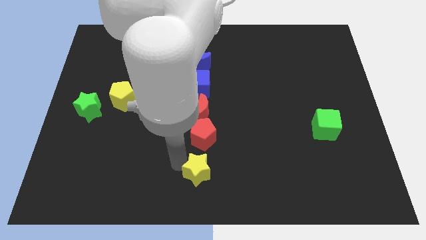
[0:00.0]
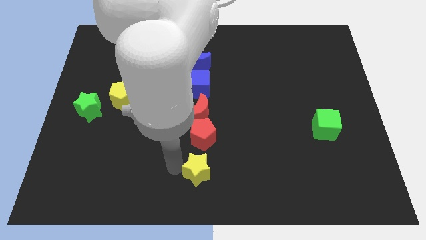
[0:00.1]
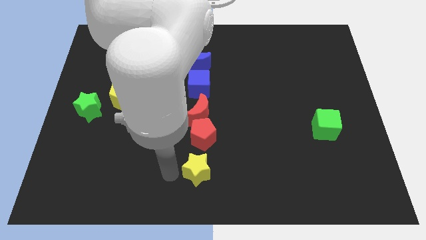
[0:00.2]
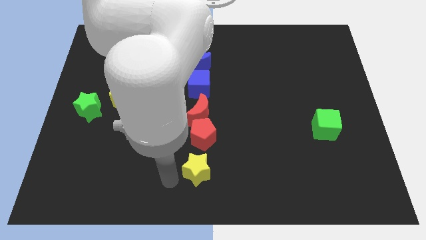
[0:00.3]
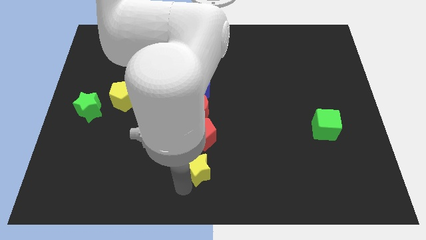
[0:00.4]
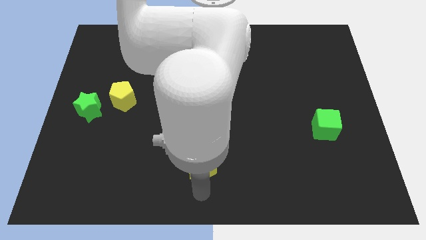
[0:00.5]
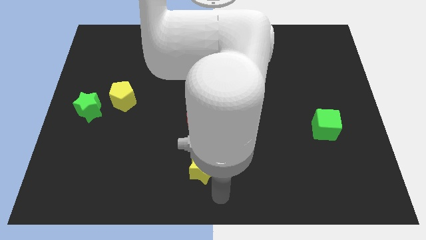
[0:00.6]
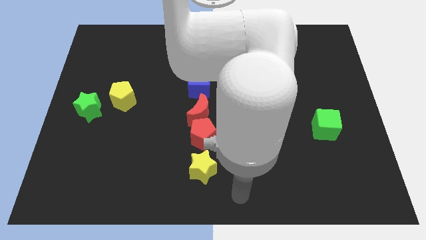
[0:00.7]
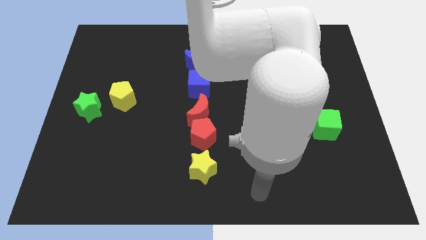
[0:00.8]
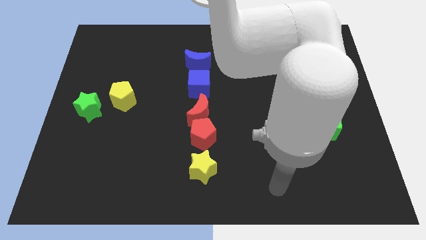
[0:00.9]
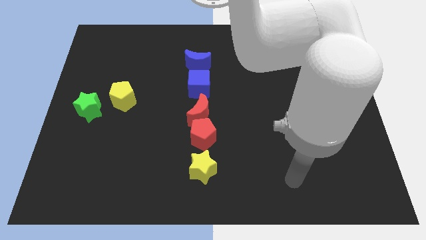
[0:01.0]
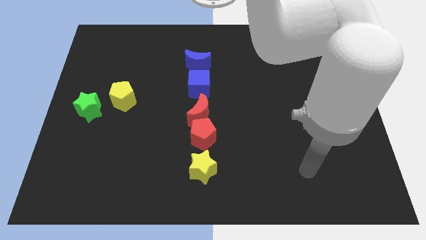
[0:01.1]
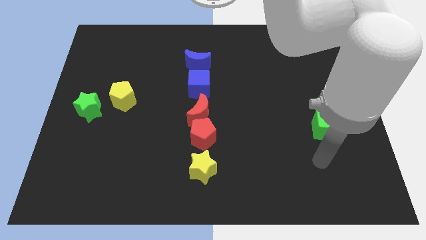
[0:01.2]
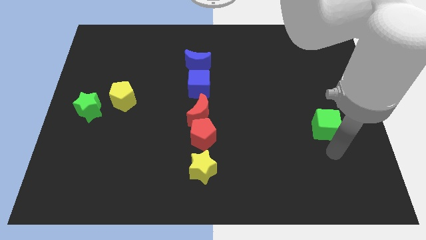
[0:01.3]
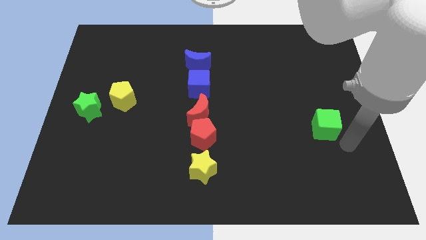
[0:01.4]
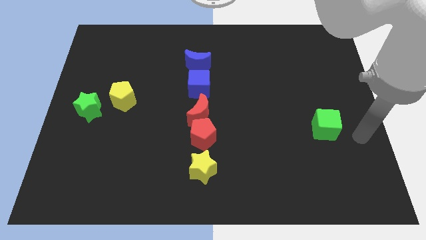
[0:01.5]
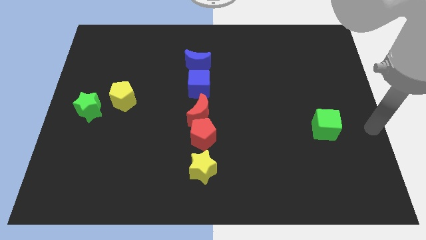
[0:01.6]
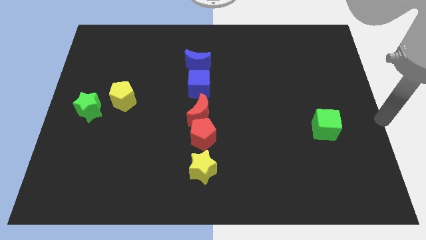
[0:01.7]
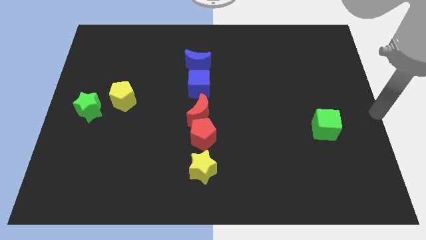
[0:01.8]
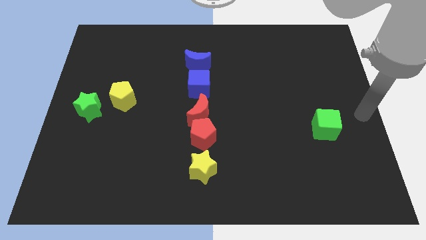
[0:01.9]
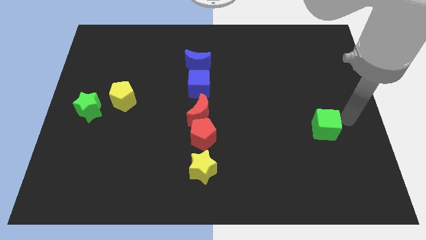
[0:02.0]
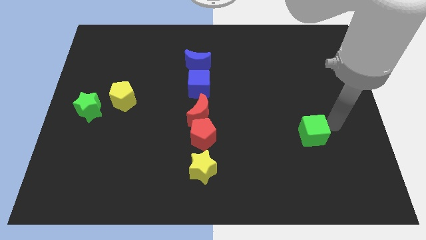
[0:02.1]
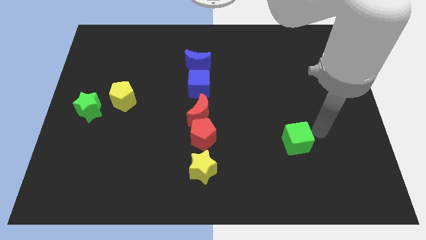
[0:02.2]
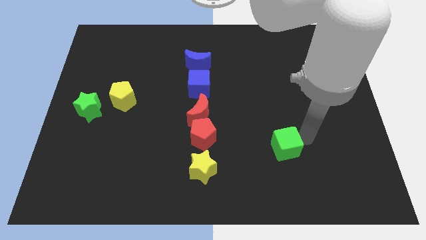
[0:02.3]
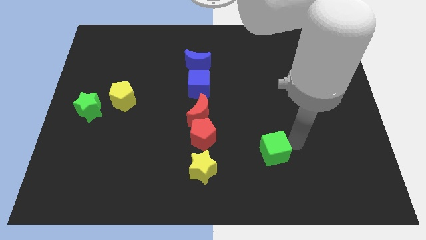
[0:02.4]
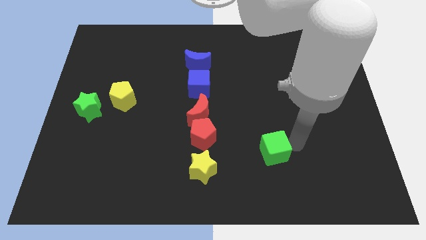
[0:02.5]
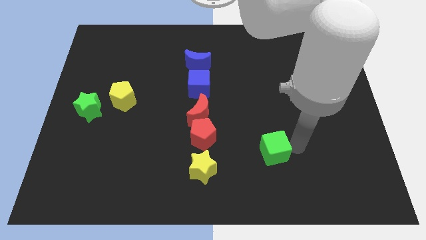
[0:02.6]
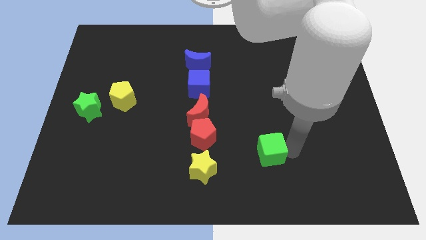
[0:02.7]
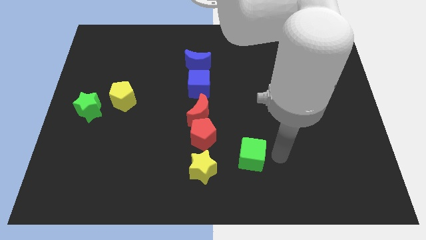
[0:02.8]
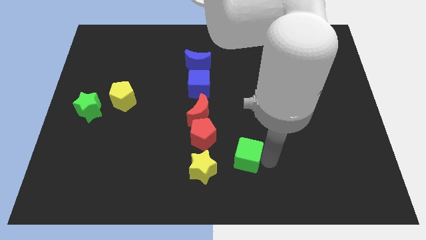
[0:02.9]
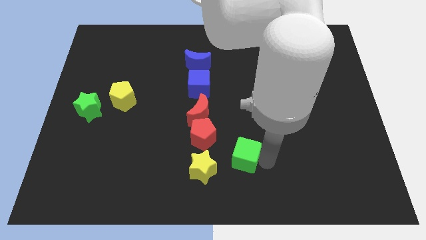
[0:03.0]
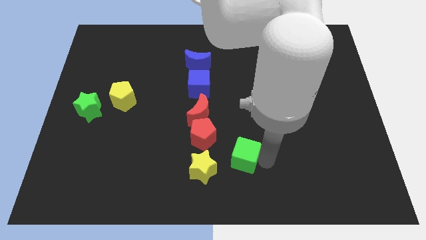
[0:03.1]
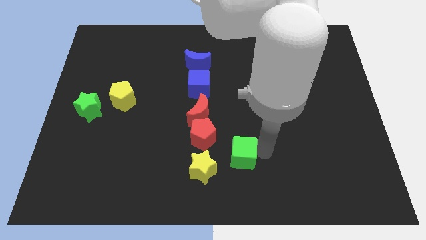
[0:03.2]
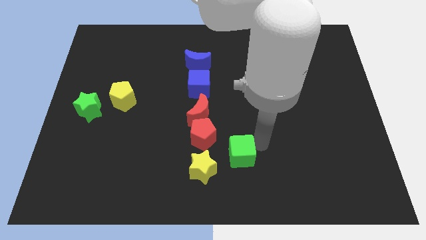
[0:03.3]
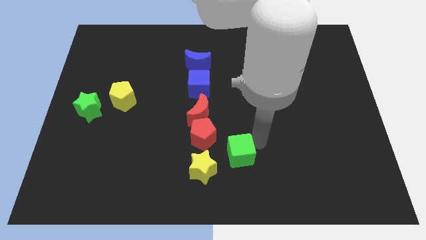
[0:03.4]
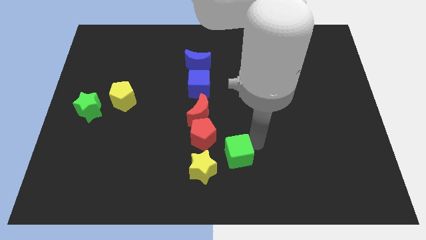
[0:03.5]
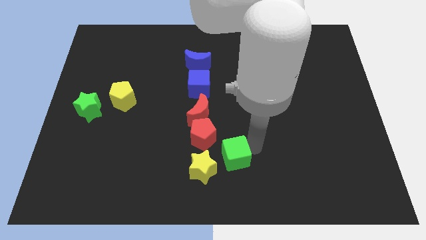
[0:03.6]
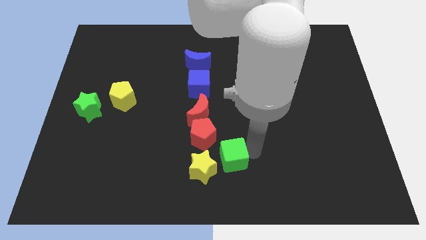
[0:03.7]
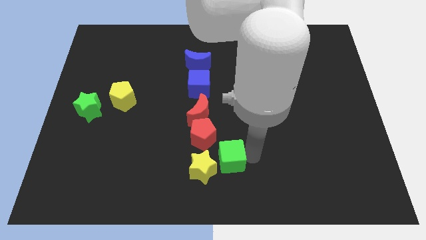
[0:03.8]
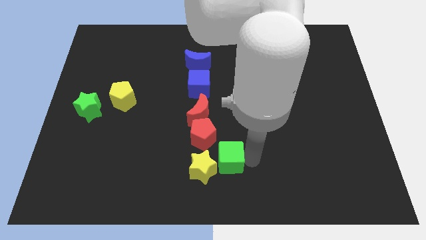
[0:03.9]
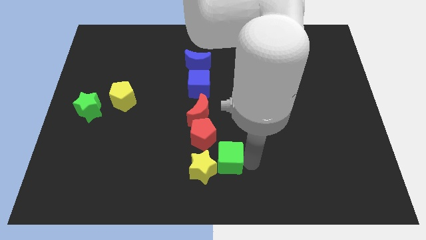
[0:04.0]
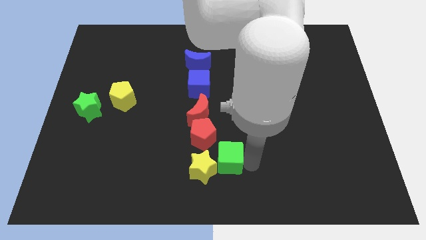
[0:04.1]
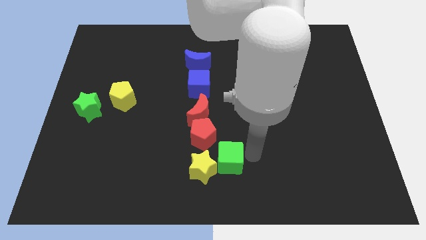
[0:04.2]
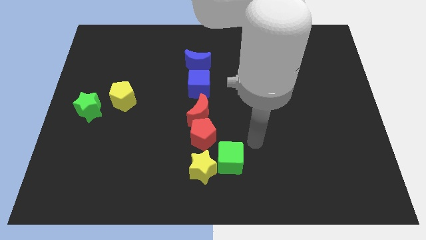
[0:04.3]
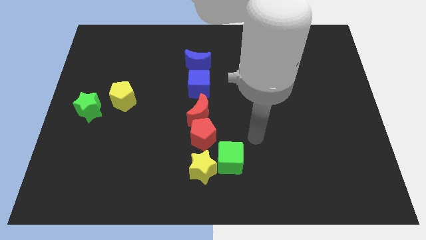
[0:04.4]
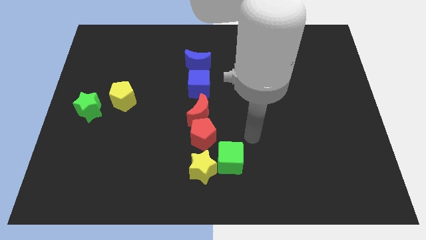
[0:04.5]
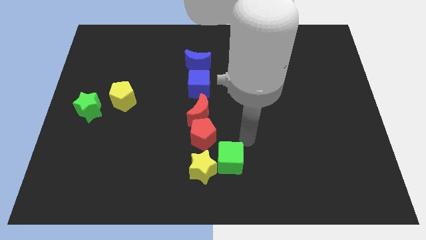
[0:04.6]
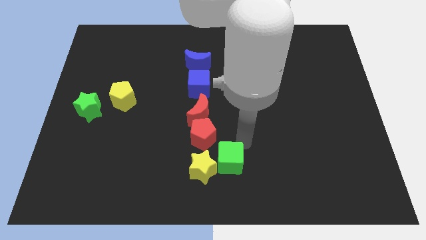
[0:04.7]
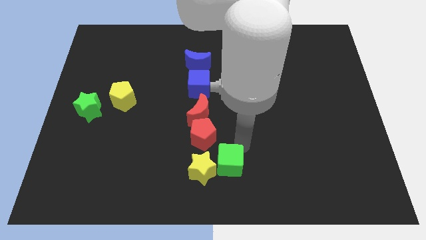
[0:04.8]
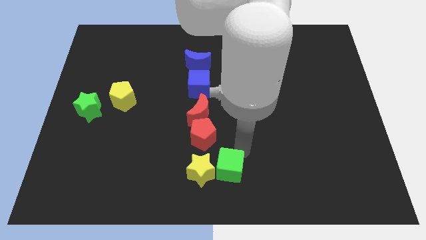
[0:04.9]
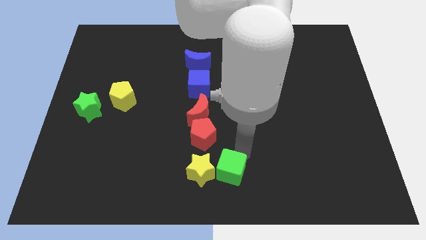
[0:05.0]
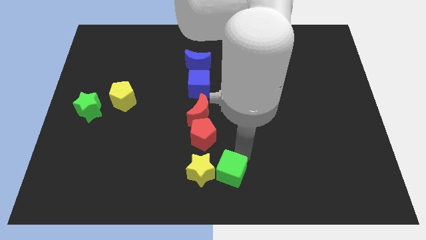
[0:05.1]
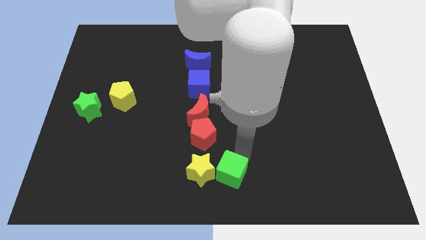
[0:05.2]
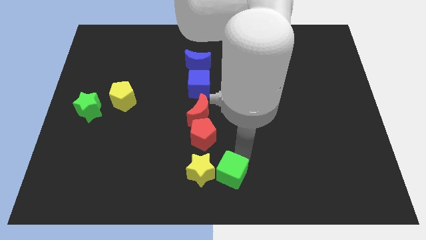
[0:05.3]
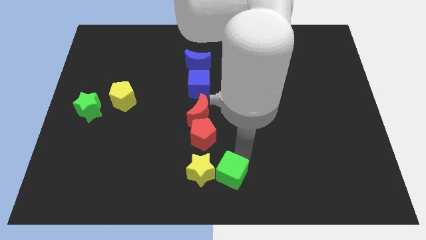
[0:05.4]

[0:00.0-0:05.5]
push the green cube into the yellow star

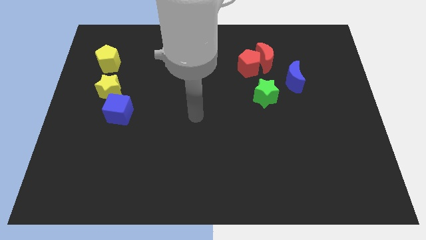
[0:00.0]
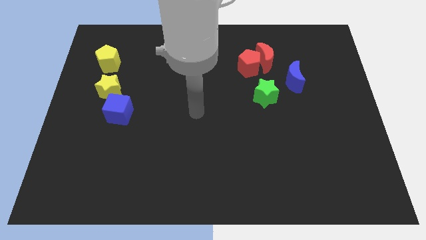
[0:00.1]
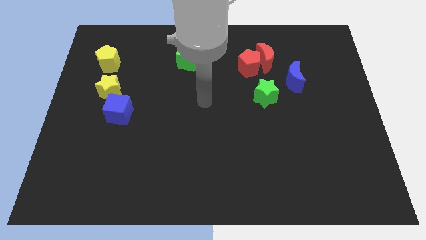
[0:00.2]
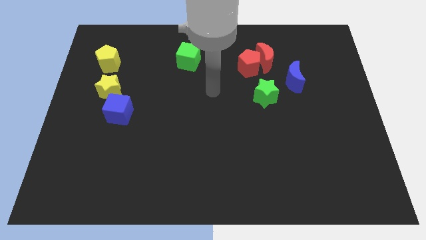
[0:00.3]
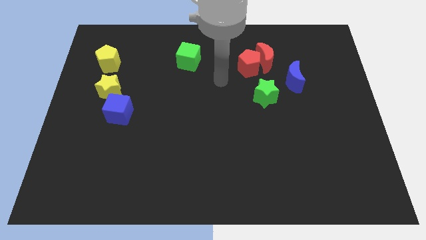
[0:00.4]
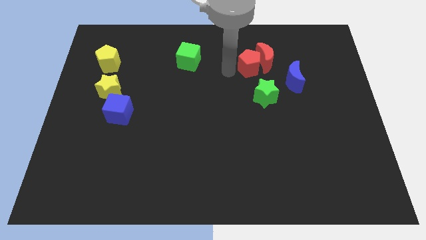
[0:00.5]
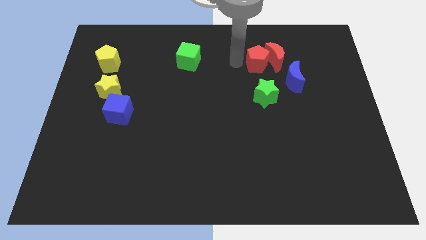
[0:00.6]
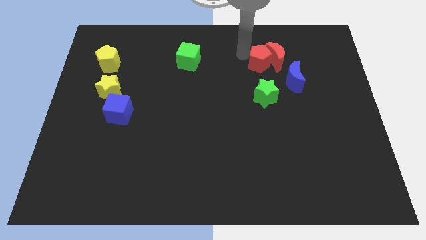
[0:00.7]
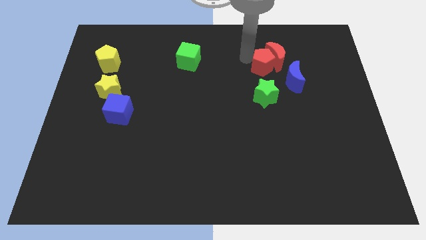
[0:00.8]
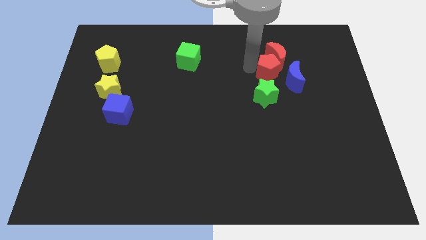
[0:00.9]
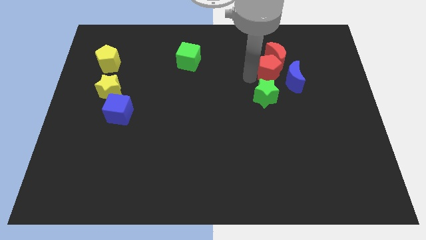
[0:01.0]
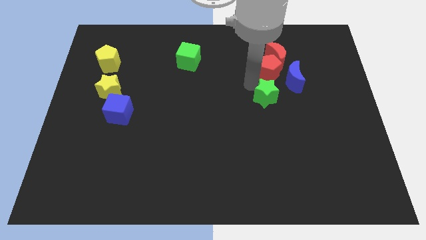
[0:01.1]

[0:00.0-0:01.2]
push the red pentagon in between red crescent and green star

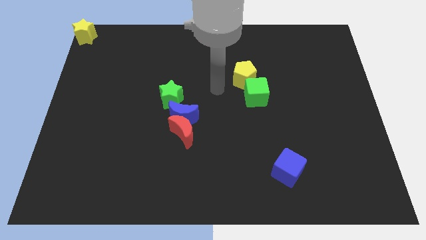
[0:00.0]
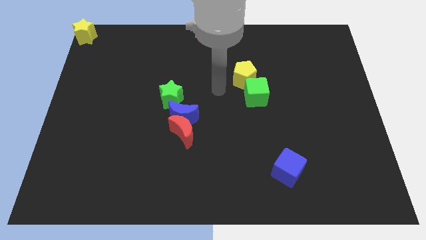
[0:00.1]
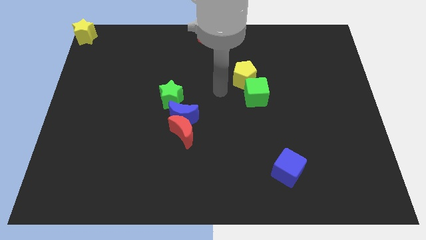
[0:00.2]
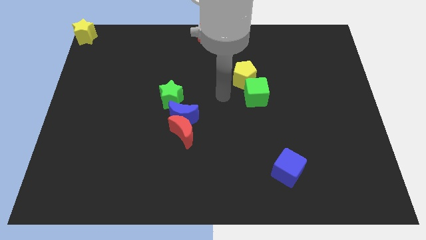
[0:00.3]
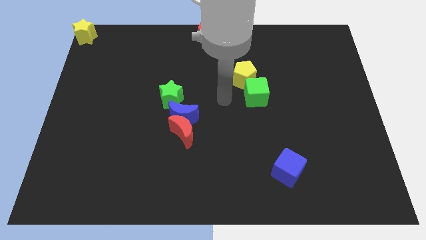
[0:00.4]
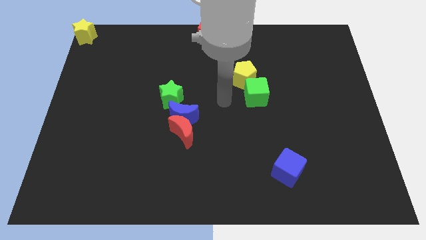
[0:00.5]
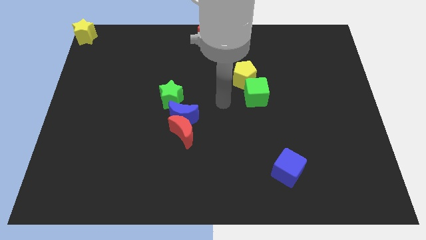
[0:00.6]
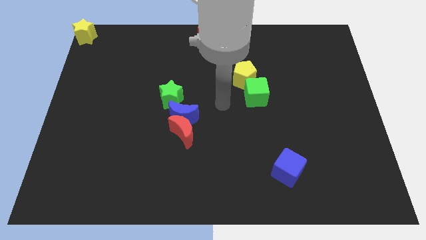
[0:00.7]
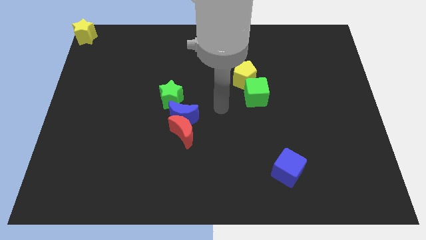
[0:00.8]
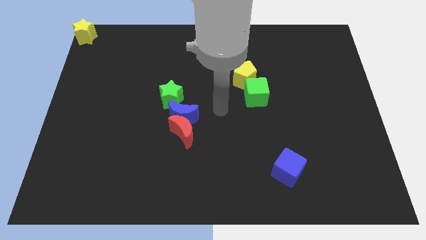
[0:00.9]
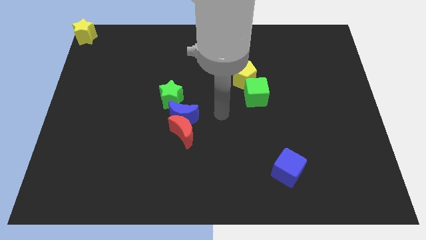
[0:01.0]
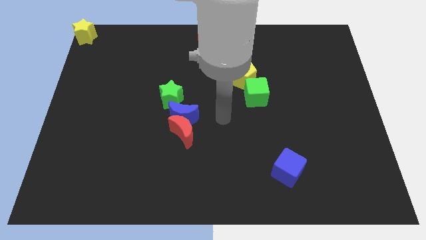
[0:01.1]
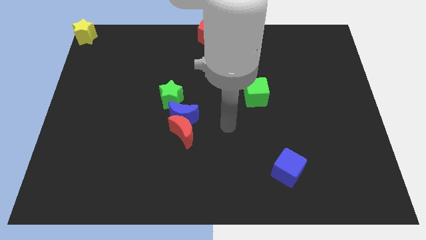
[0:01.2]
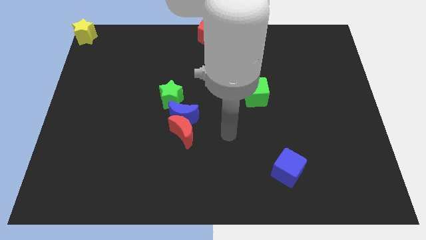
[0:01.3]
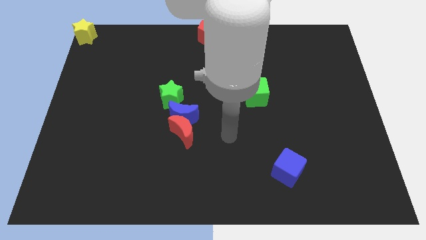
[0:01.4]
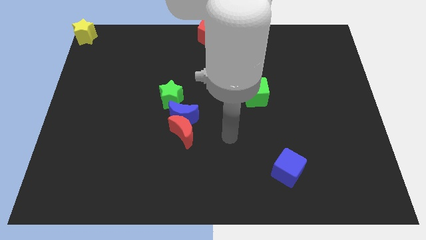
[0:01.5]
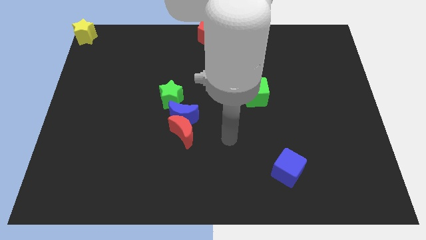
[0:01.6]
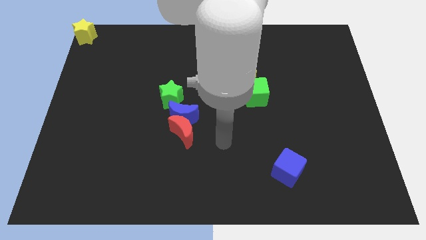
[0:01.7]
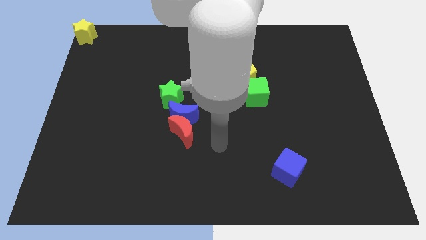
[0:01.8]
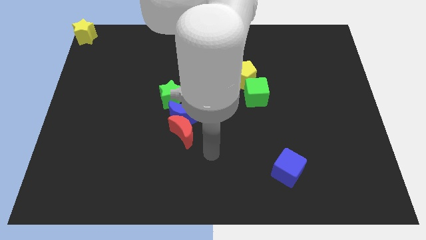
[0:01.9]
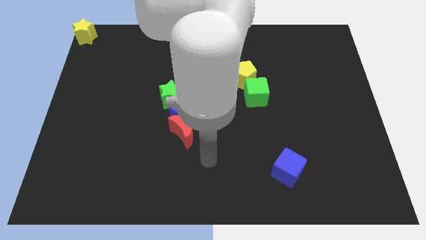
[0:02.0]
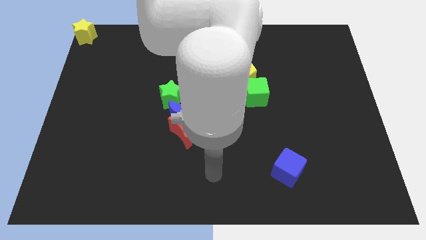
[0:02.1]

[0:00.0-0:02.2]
move your arm towards the bottom center of the board
